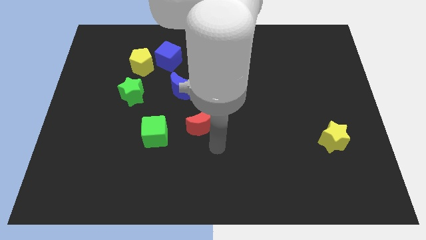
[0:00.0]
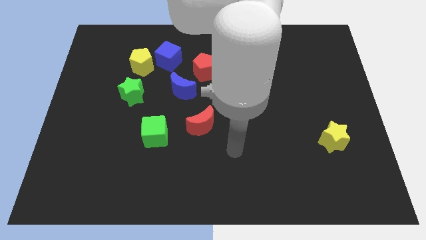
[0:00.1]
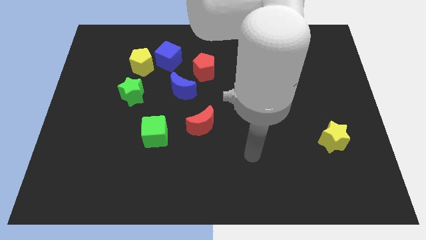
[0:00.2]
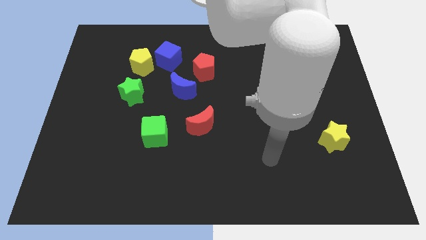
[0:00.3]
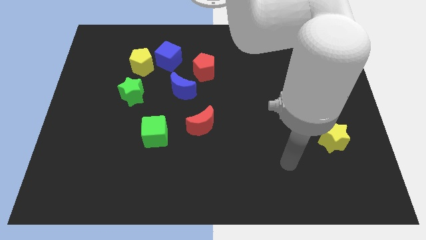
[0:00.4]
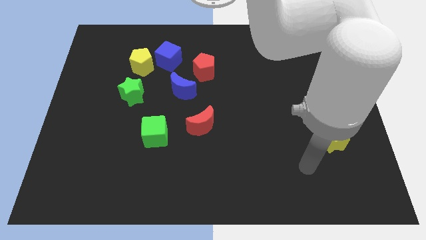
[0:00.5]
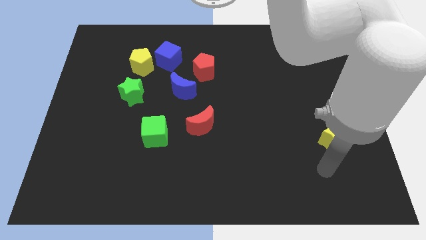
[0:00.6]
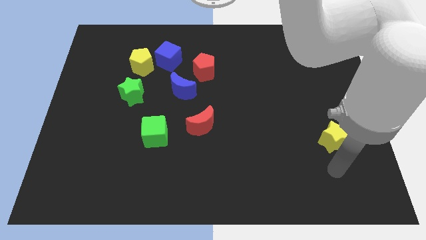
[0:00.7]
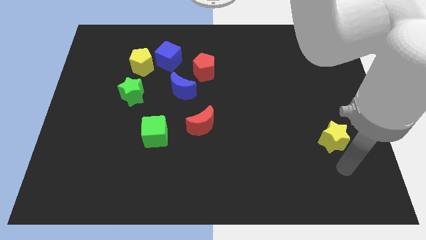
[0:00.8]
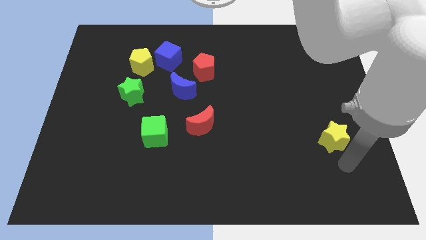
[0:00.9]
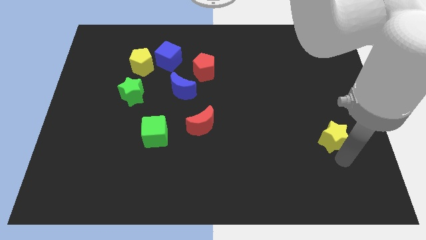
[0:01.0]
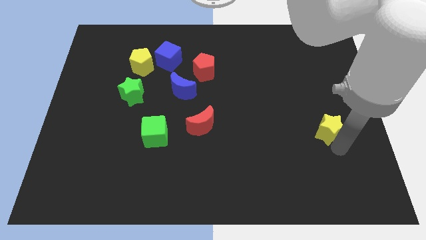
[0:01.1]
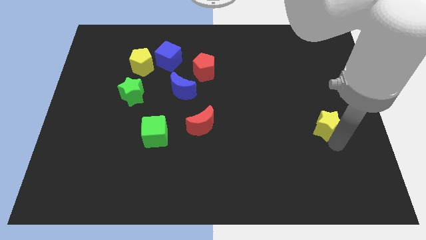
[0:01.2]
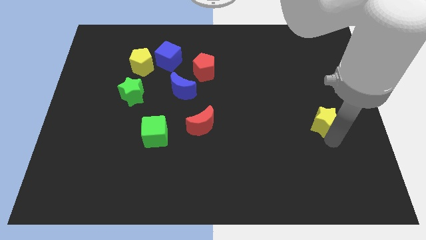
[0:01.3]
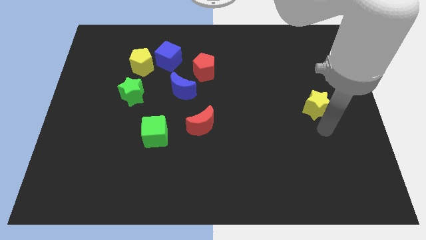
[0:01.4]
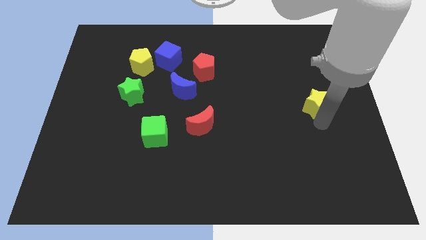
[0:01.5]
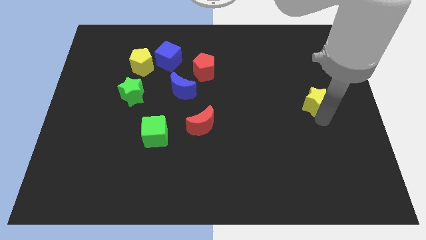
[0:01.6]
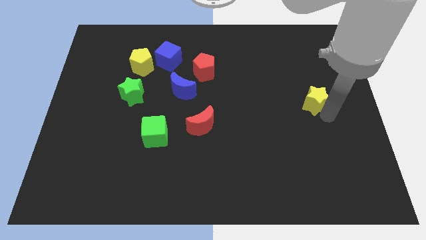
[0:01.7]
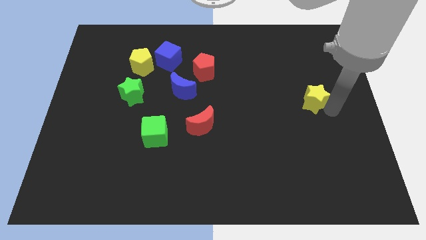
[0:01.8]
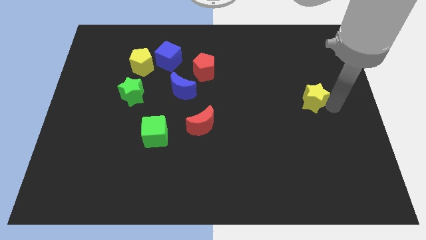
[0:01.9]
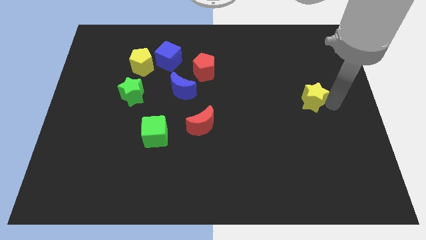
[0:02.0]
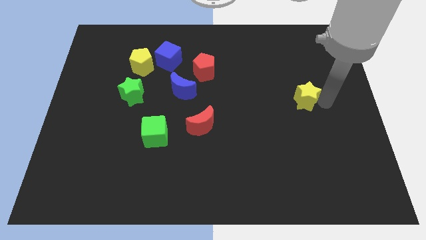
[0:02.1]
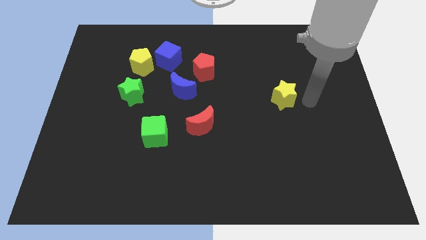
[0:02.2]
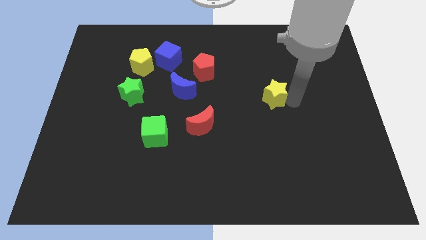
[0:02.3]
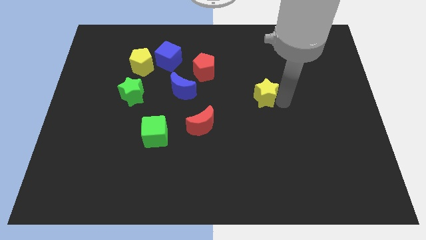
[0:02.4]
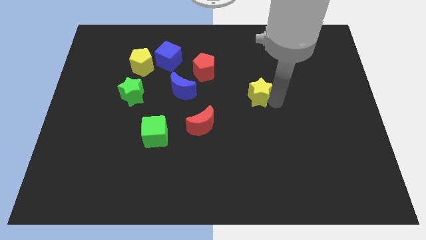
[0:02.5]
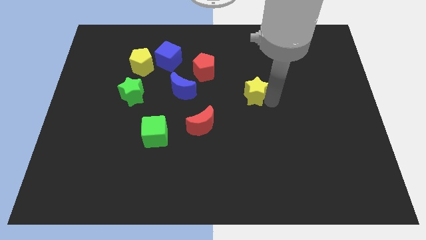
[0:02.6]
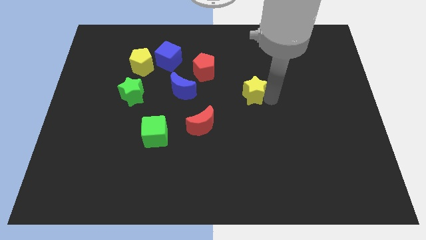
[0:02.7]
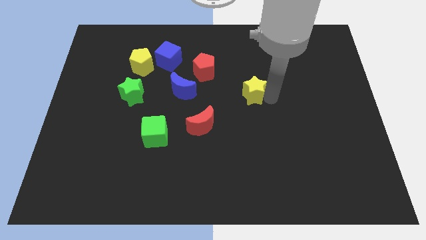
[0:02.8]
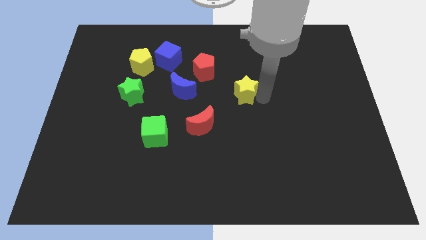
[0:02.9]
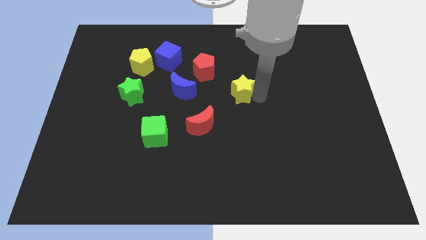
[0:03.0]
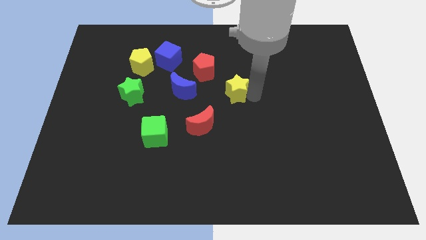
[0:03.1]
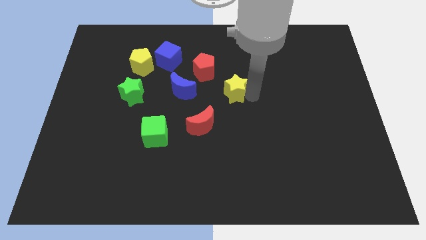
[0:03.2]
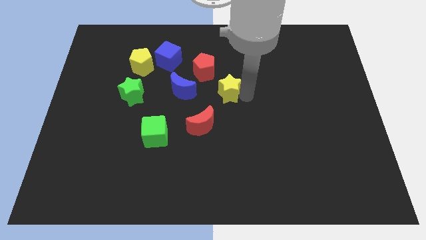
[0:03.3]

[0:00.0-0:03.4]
move the yellow star to the right of the blue crescent

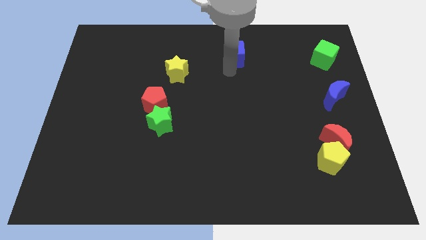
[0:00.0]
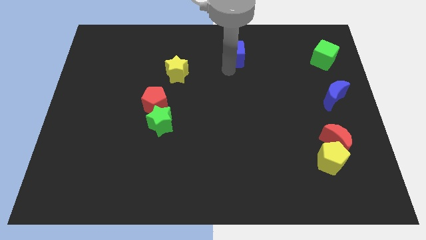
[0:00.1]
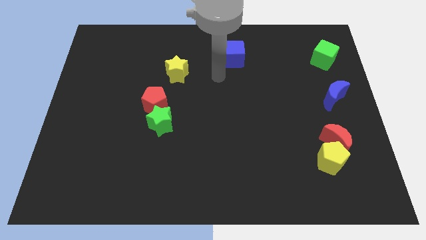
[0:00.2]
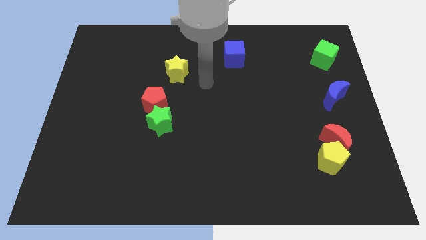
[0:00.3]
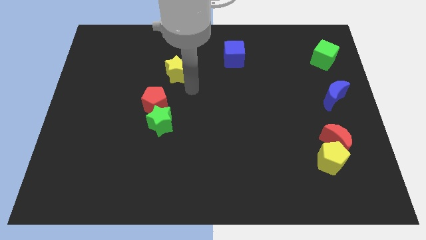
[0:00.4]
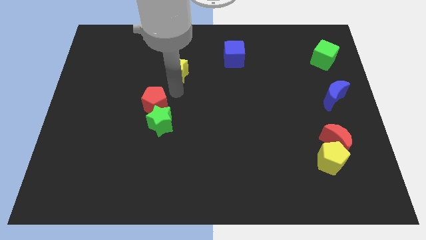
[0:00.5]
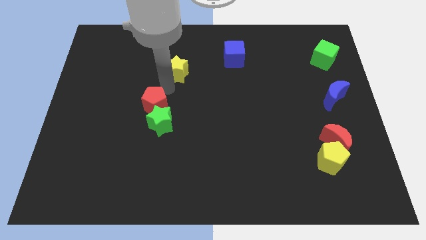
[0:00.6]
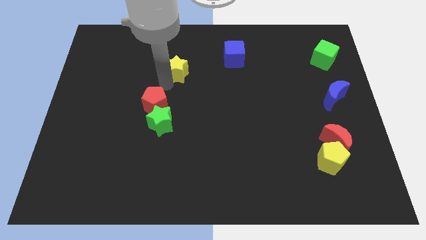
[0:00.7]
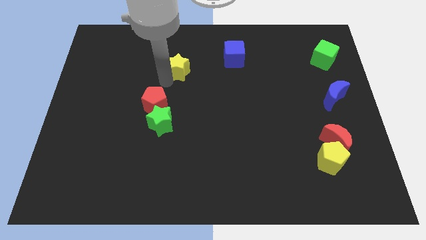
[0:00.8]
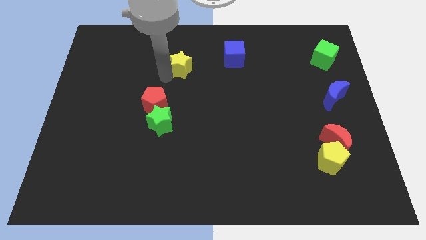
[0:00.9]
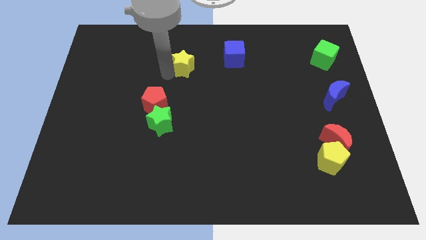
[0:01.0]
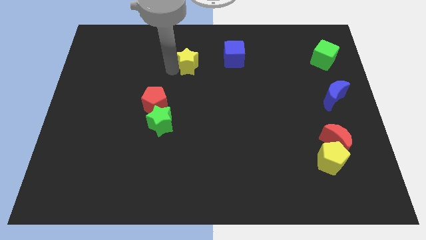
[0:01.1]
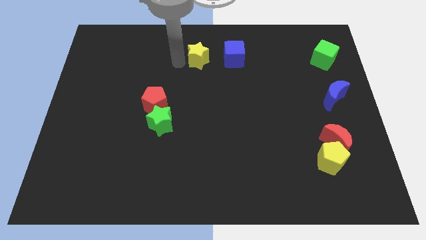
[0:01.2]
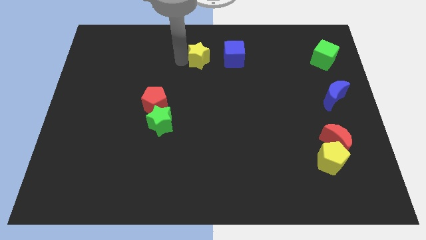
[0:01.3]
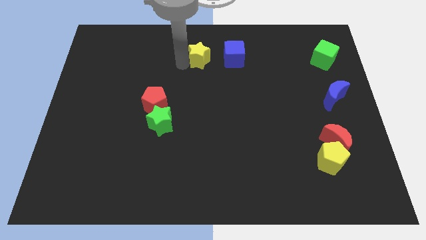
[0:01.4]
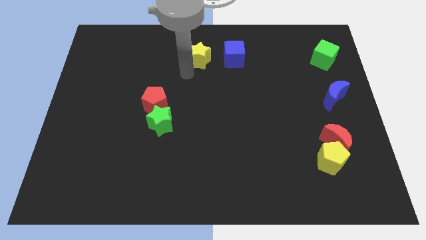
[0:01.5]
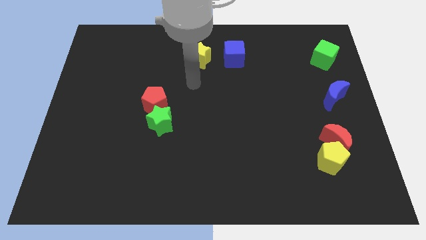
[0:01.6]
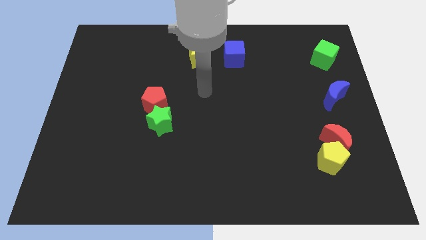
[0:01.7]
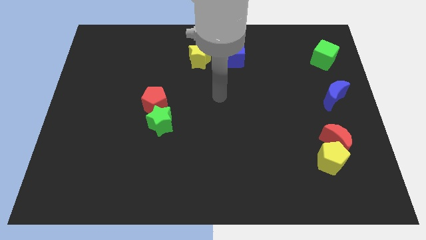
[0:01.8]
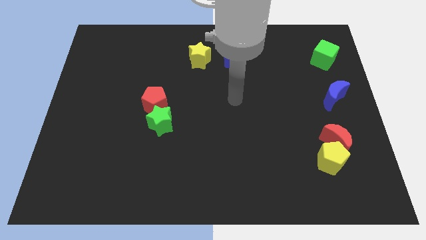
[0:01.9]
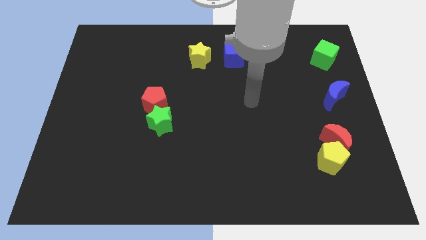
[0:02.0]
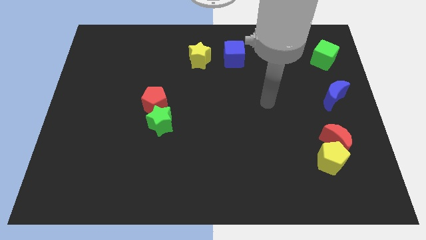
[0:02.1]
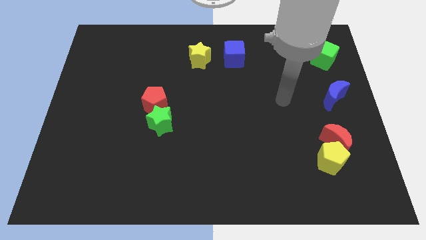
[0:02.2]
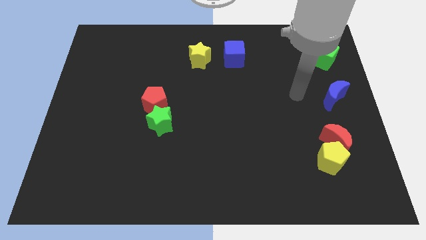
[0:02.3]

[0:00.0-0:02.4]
push the yellow star upwards

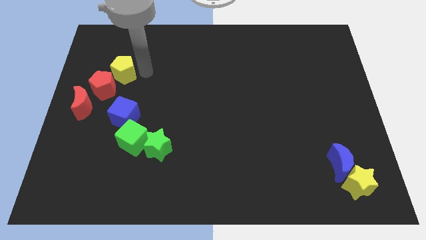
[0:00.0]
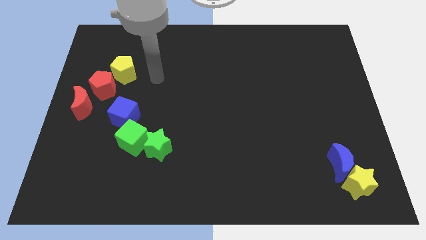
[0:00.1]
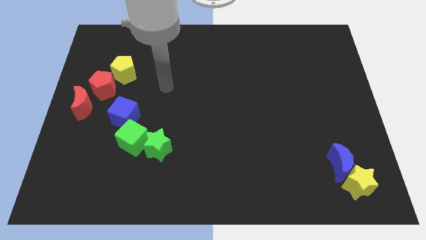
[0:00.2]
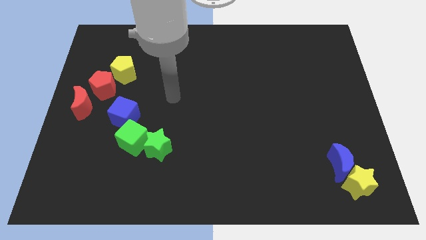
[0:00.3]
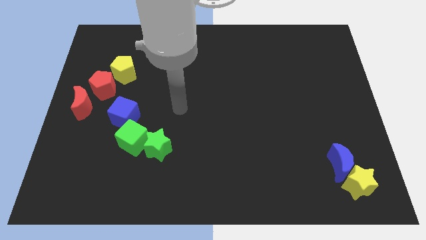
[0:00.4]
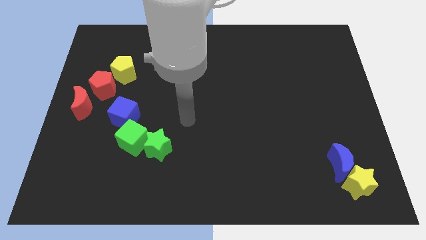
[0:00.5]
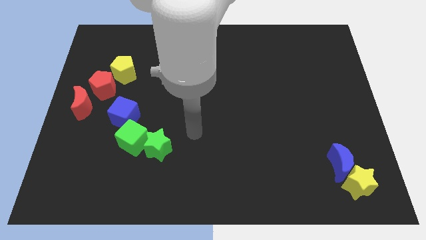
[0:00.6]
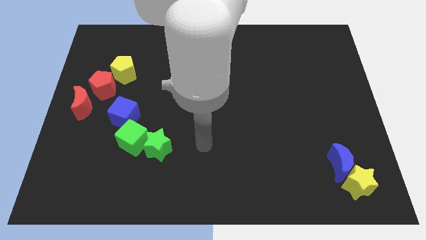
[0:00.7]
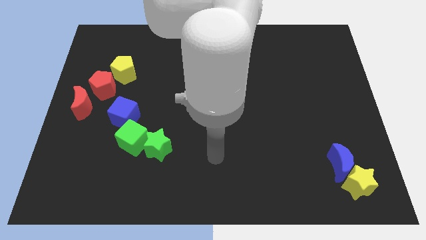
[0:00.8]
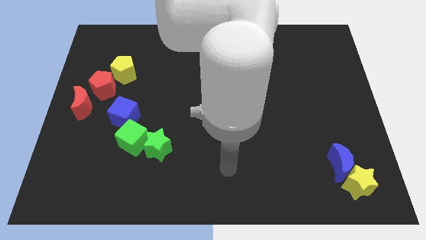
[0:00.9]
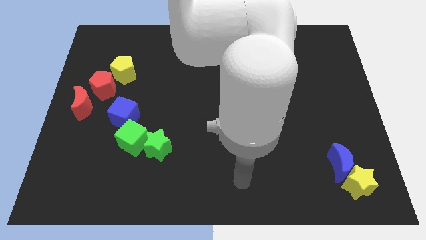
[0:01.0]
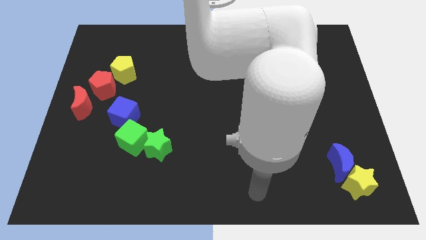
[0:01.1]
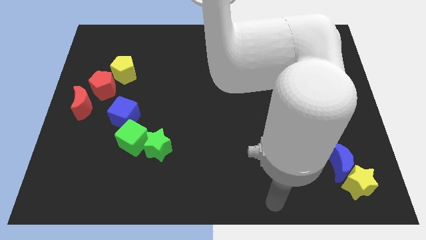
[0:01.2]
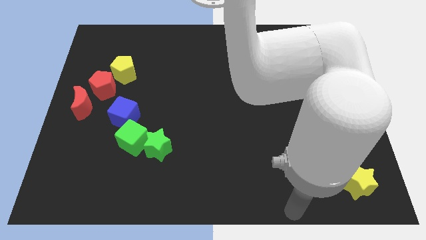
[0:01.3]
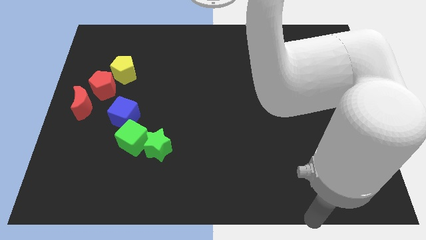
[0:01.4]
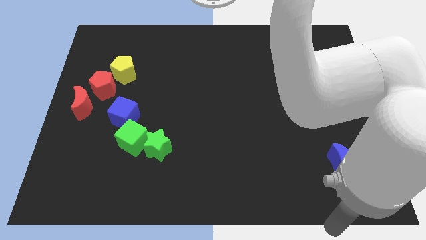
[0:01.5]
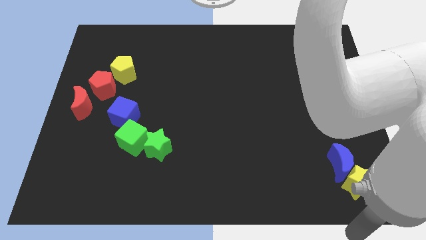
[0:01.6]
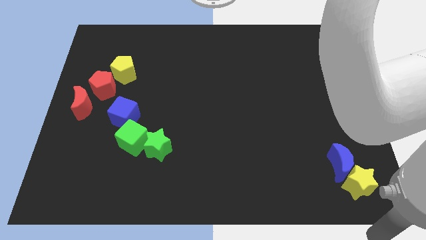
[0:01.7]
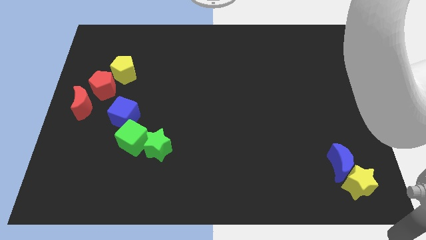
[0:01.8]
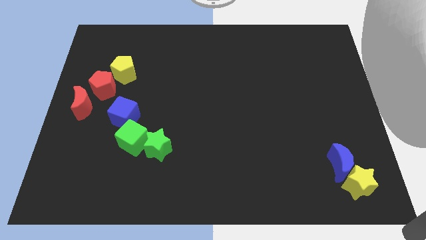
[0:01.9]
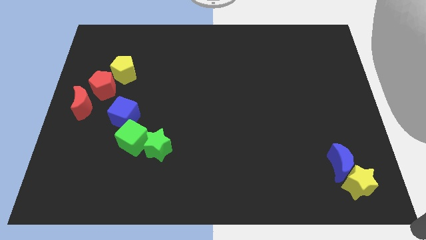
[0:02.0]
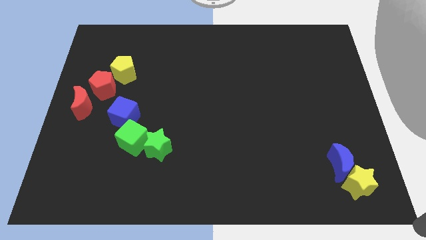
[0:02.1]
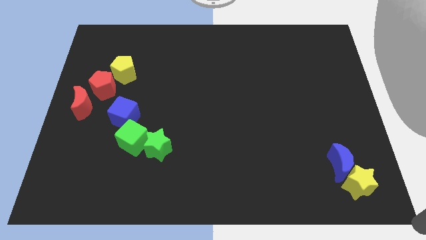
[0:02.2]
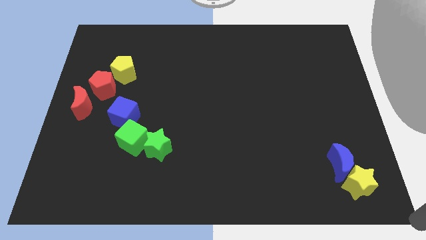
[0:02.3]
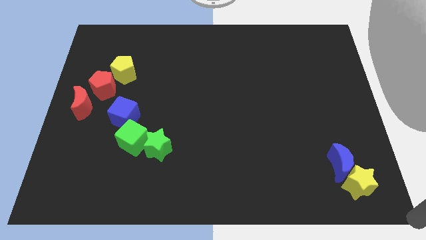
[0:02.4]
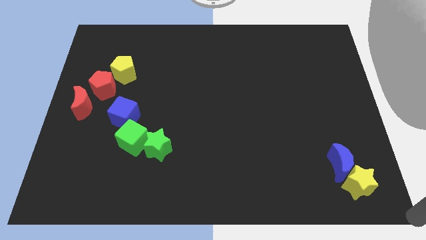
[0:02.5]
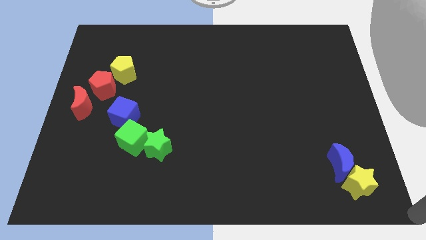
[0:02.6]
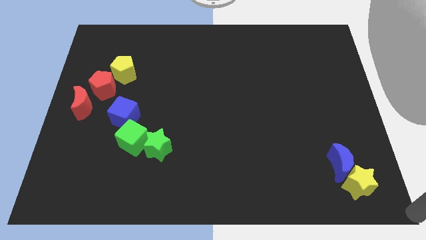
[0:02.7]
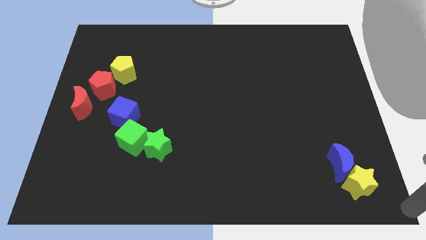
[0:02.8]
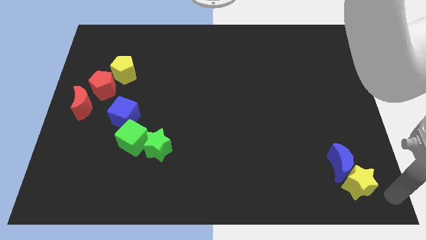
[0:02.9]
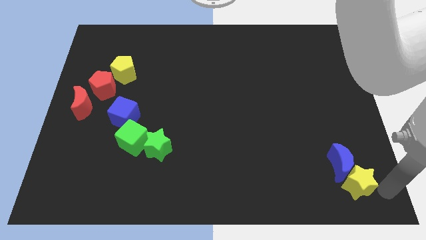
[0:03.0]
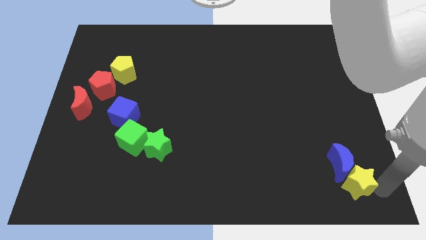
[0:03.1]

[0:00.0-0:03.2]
move your arm away from the yellow pentagon
